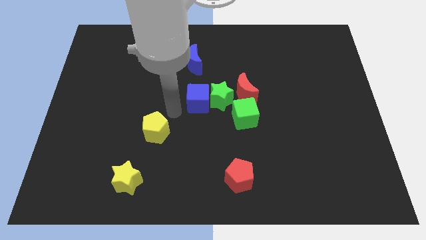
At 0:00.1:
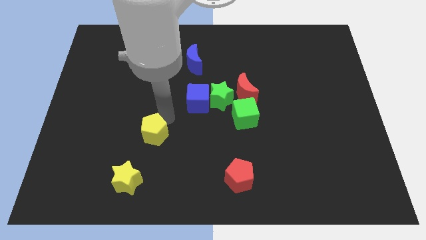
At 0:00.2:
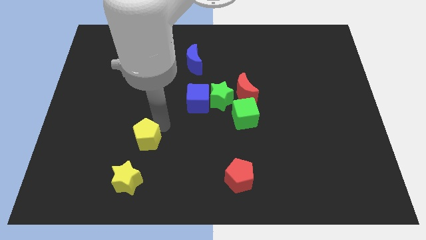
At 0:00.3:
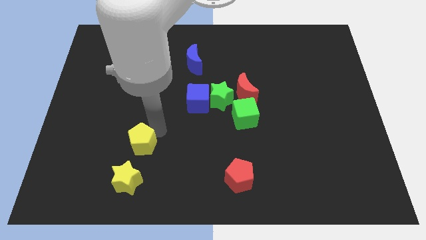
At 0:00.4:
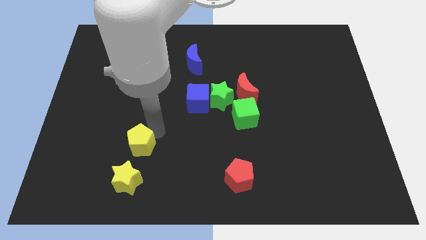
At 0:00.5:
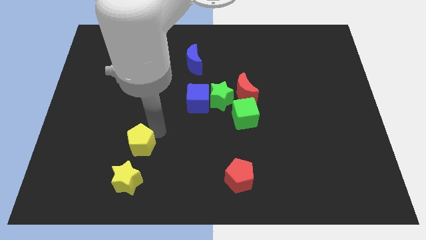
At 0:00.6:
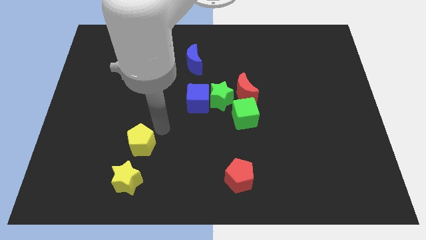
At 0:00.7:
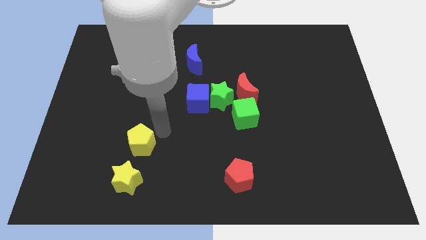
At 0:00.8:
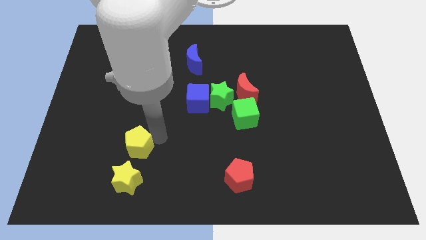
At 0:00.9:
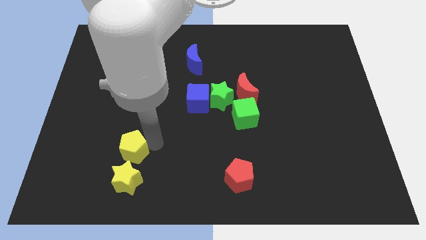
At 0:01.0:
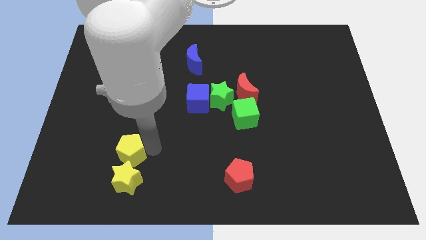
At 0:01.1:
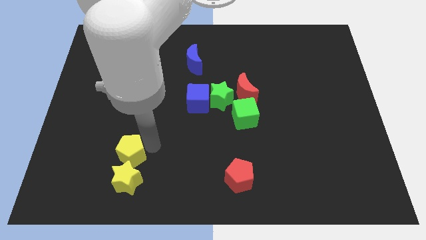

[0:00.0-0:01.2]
push the yellow pentagon into the yellow star

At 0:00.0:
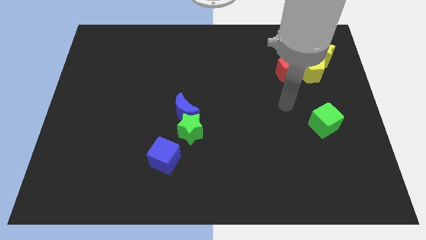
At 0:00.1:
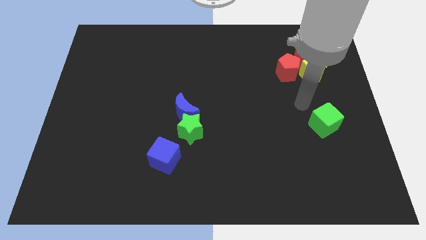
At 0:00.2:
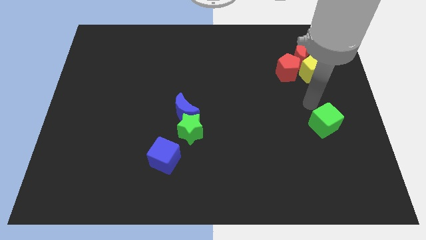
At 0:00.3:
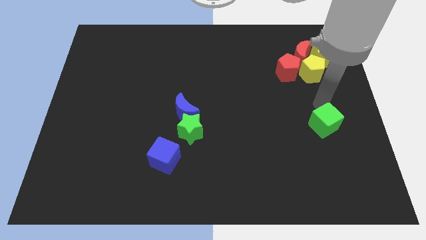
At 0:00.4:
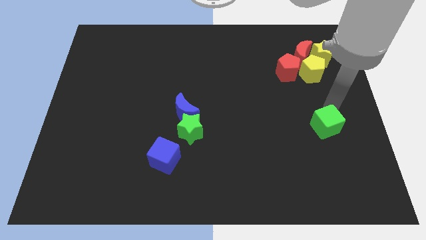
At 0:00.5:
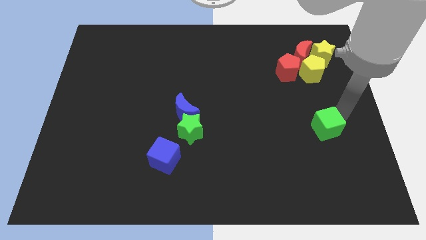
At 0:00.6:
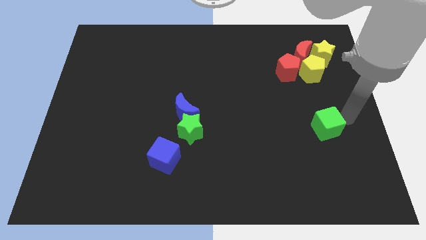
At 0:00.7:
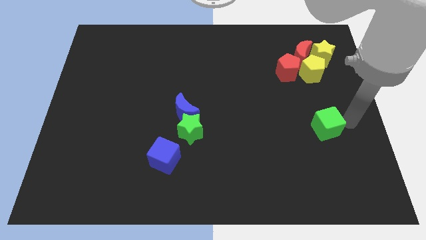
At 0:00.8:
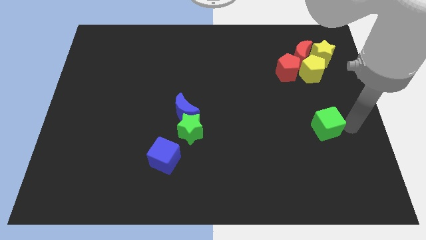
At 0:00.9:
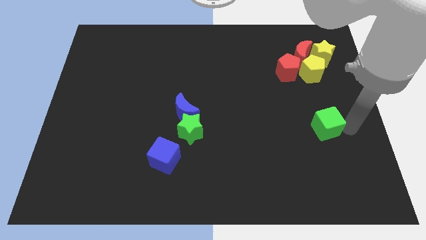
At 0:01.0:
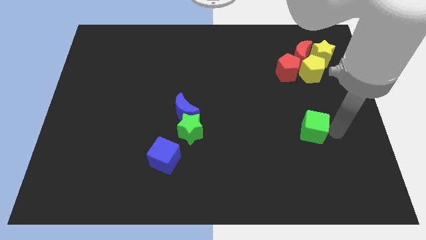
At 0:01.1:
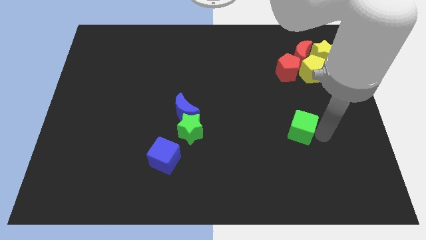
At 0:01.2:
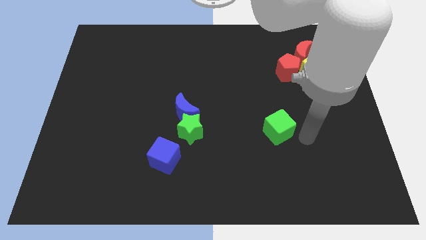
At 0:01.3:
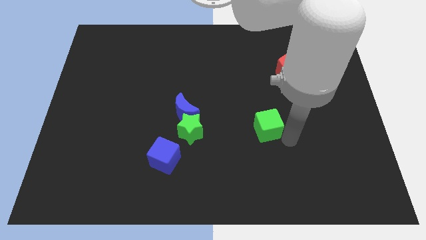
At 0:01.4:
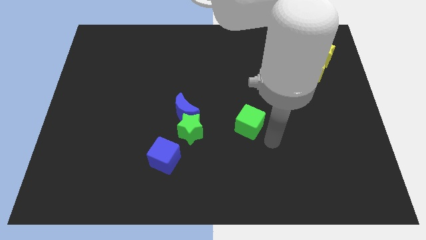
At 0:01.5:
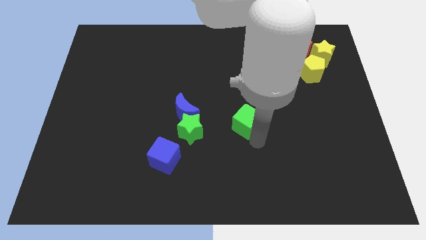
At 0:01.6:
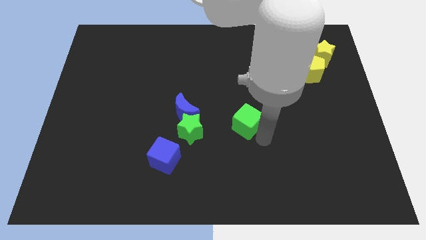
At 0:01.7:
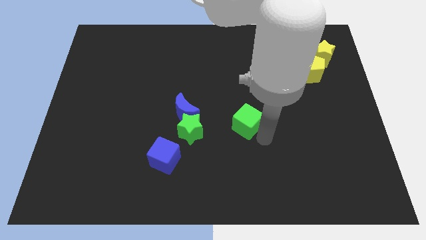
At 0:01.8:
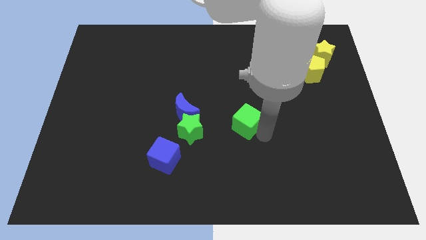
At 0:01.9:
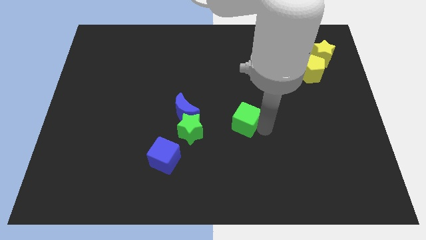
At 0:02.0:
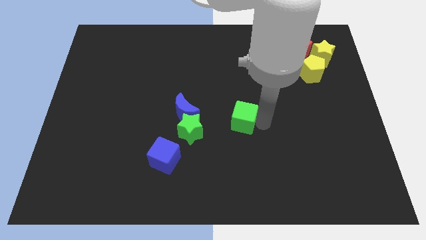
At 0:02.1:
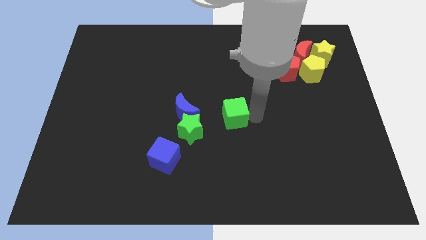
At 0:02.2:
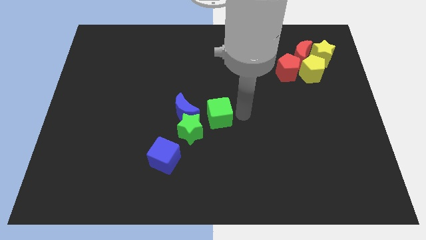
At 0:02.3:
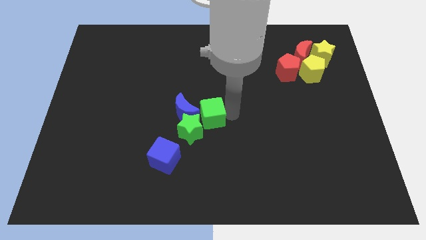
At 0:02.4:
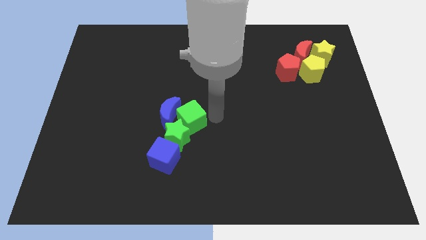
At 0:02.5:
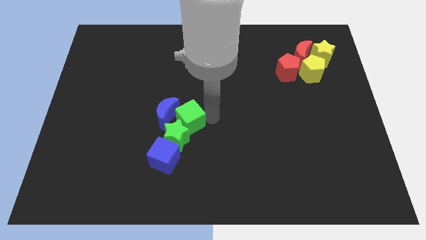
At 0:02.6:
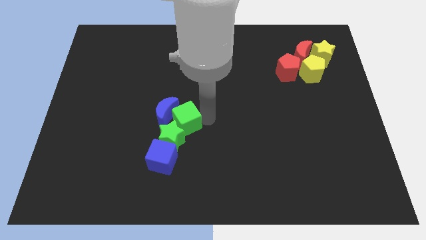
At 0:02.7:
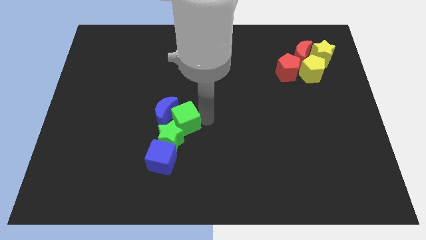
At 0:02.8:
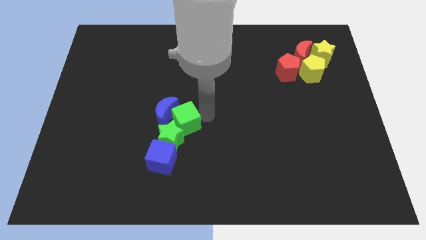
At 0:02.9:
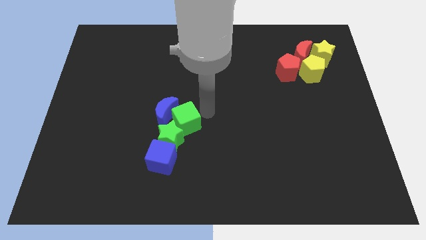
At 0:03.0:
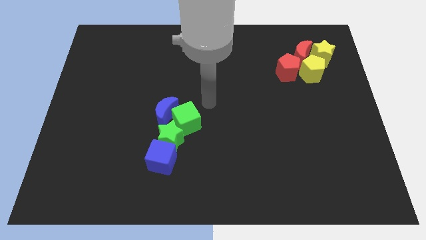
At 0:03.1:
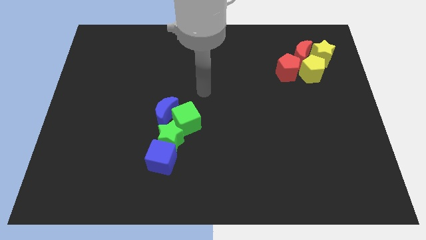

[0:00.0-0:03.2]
push green cube towards blue crescent and green star

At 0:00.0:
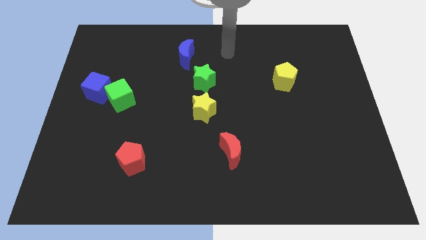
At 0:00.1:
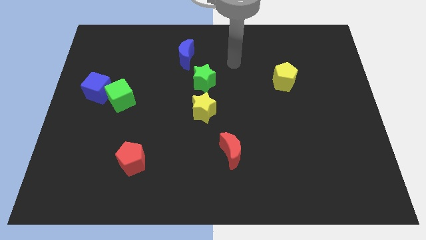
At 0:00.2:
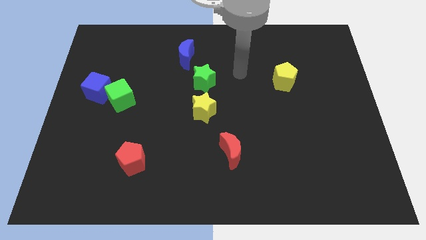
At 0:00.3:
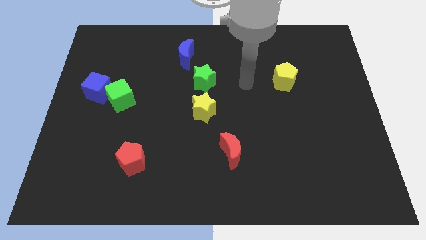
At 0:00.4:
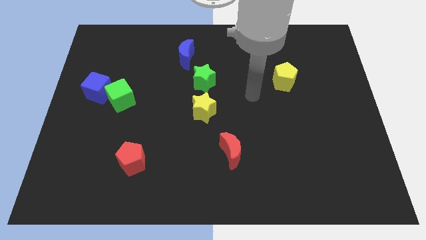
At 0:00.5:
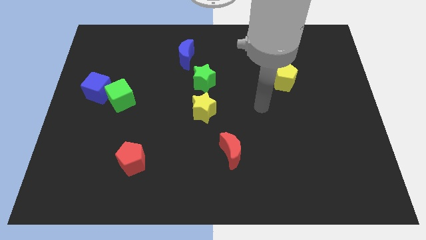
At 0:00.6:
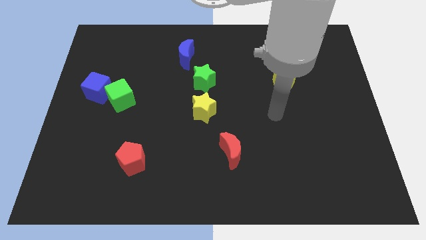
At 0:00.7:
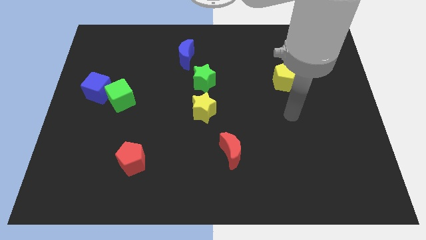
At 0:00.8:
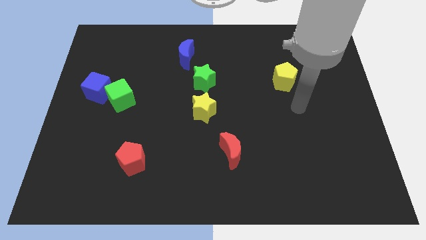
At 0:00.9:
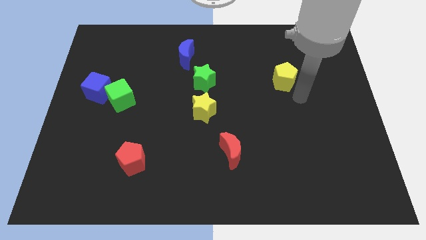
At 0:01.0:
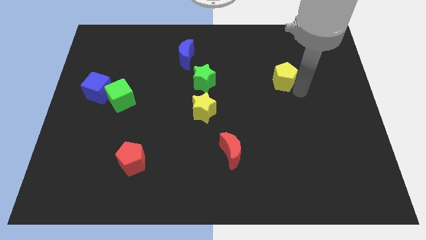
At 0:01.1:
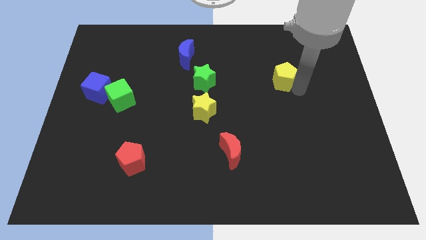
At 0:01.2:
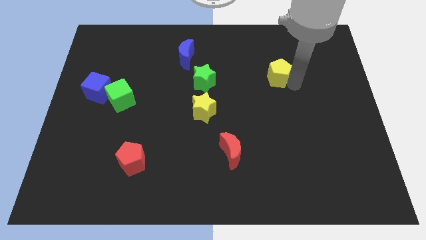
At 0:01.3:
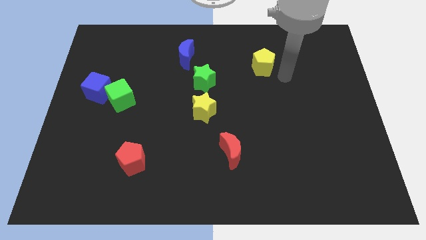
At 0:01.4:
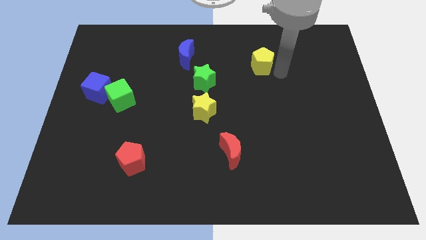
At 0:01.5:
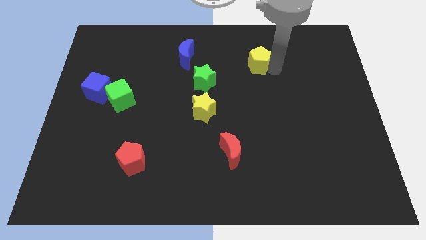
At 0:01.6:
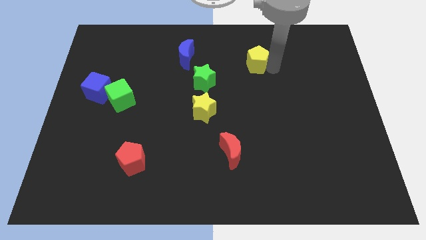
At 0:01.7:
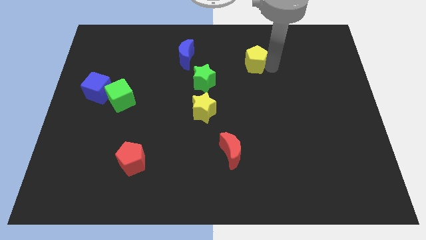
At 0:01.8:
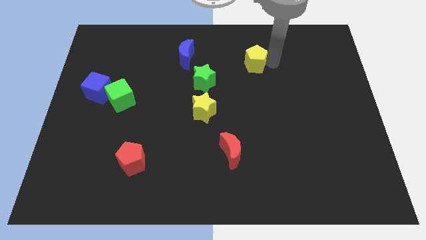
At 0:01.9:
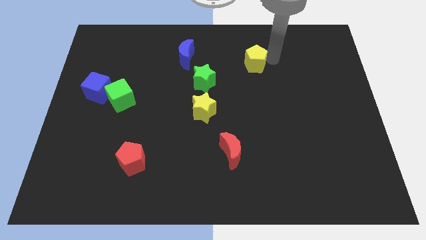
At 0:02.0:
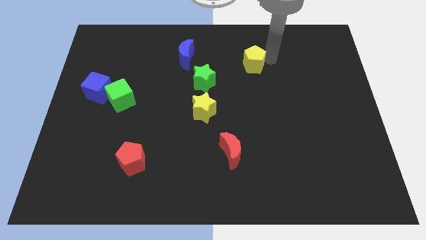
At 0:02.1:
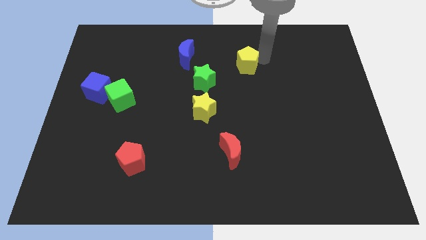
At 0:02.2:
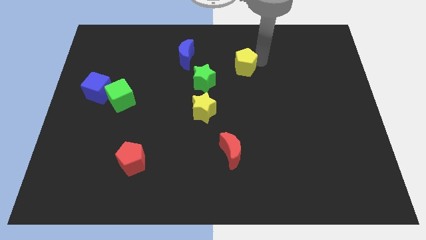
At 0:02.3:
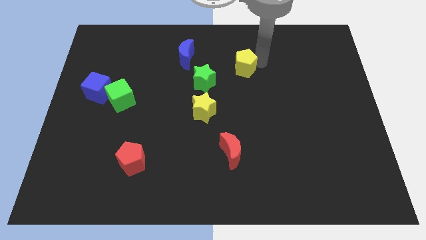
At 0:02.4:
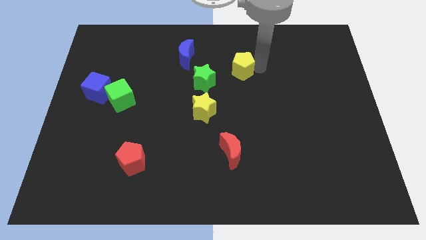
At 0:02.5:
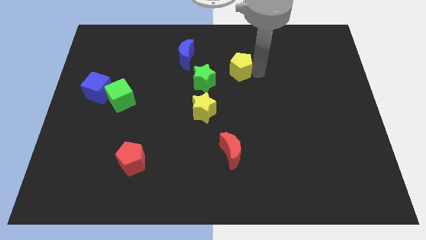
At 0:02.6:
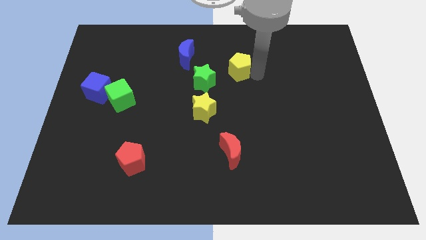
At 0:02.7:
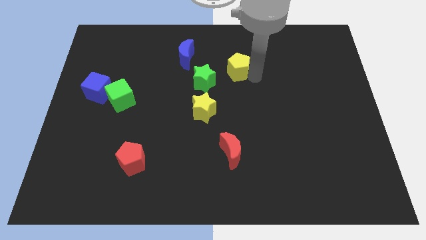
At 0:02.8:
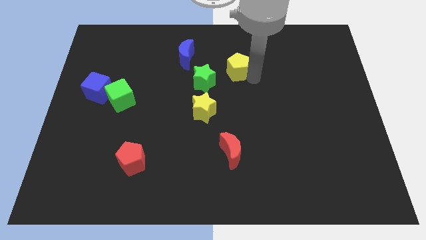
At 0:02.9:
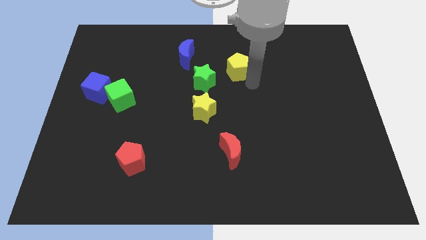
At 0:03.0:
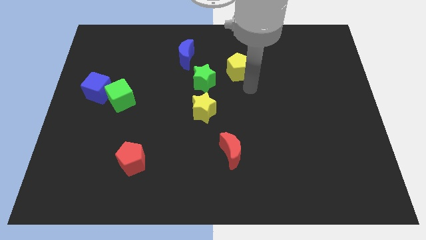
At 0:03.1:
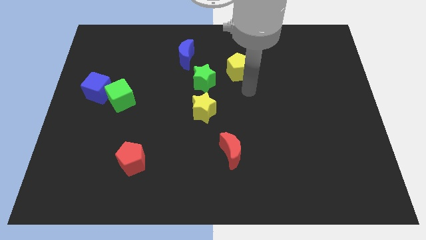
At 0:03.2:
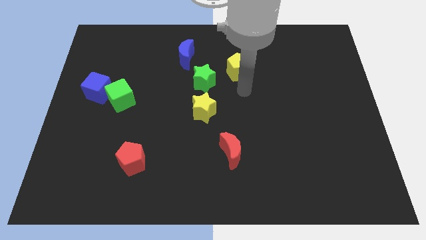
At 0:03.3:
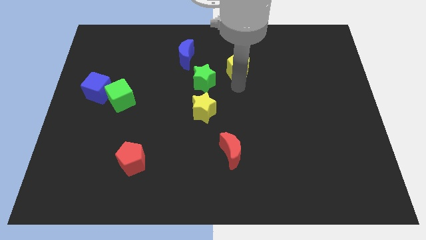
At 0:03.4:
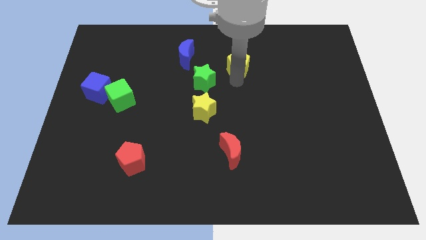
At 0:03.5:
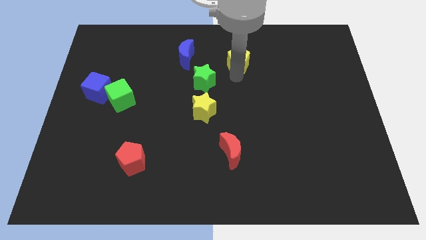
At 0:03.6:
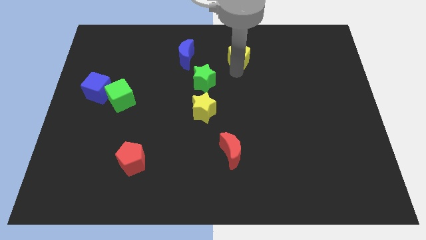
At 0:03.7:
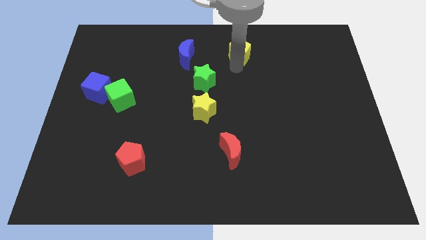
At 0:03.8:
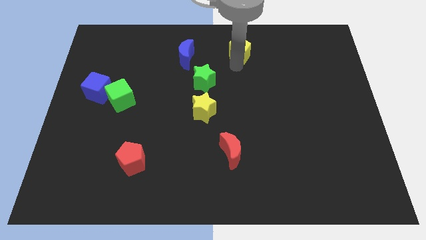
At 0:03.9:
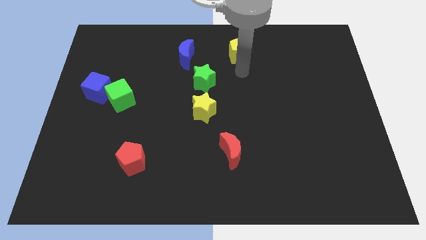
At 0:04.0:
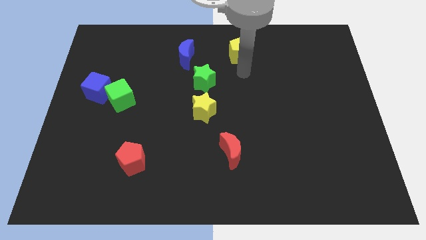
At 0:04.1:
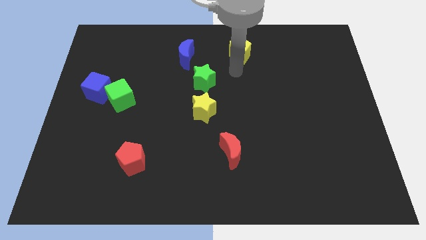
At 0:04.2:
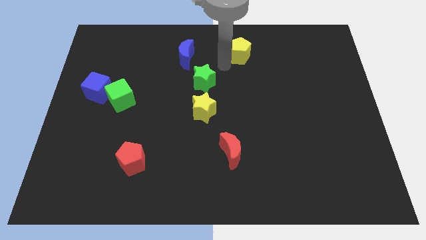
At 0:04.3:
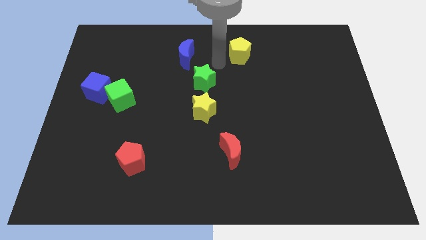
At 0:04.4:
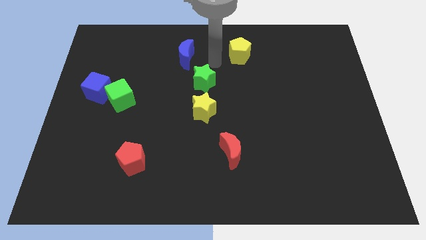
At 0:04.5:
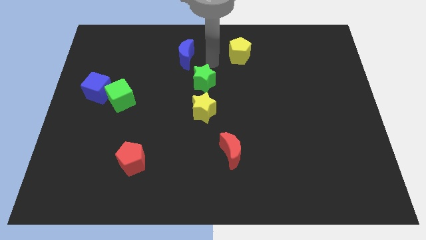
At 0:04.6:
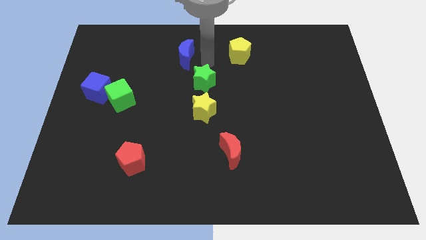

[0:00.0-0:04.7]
push the yellow pentagon to the right of the blue crescent
